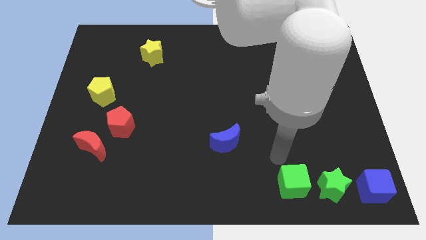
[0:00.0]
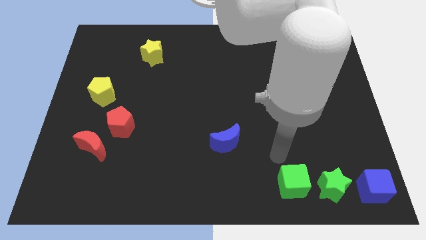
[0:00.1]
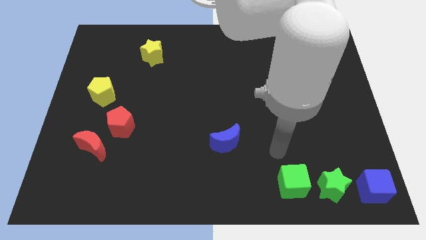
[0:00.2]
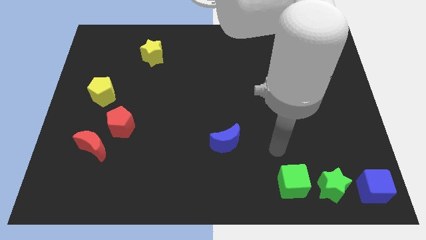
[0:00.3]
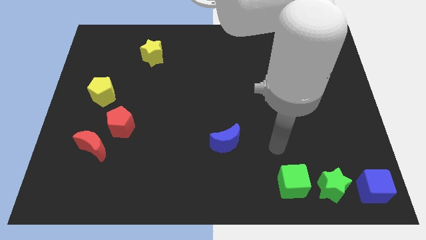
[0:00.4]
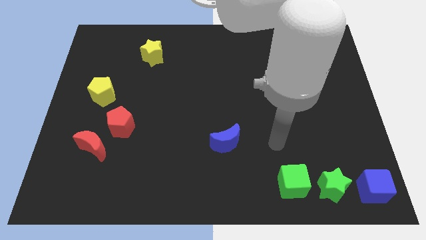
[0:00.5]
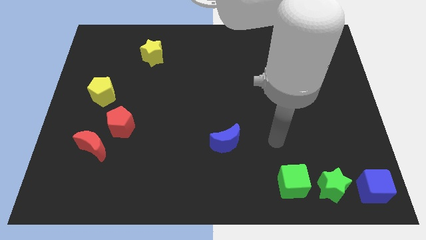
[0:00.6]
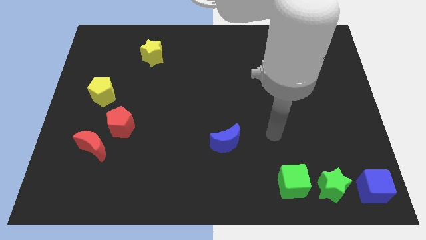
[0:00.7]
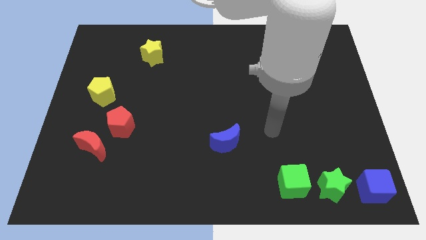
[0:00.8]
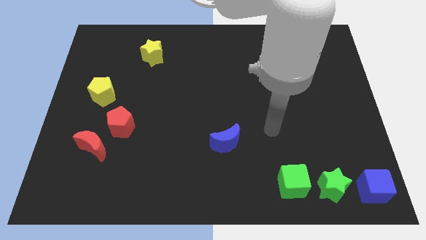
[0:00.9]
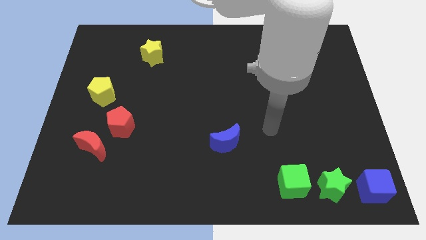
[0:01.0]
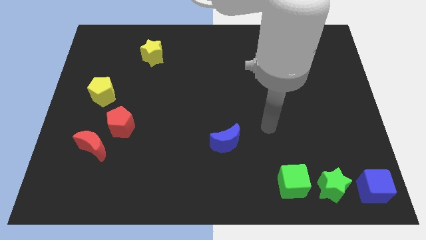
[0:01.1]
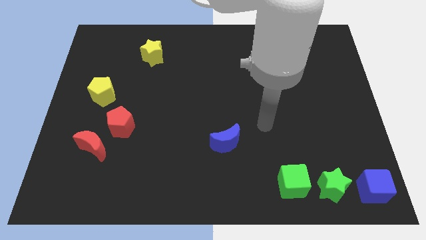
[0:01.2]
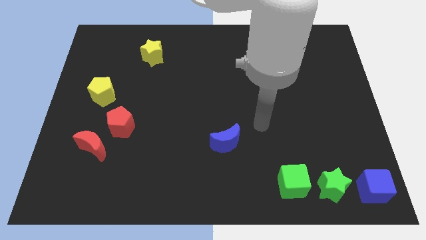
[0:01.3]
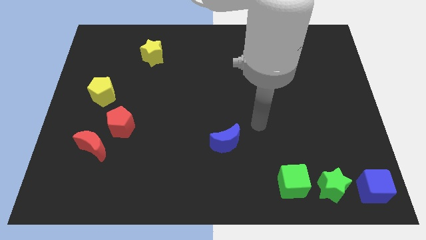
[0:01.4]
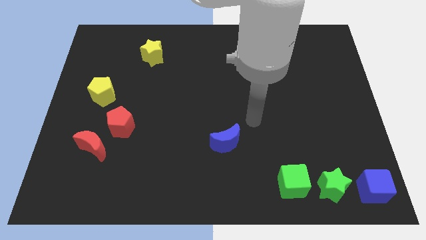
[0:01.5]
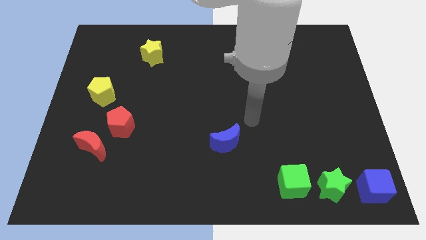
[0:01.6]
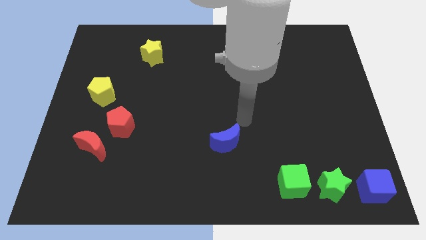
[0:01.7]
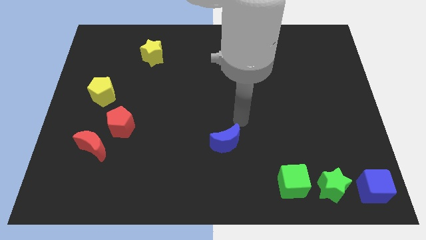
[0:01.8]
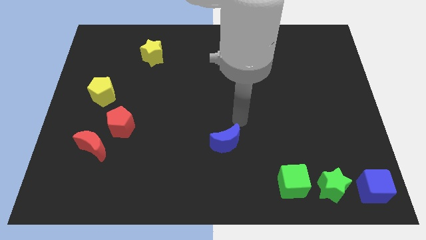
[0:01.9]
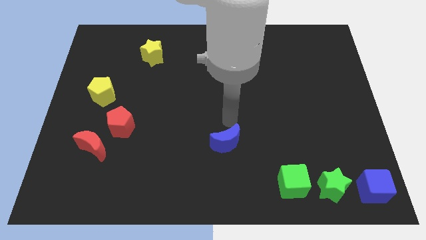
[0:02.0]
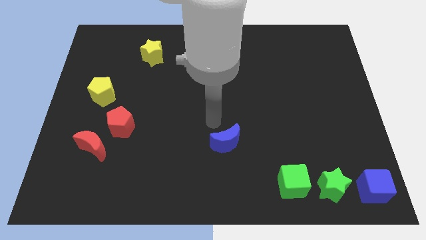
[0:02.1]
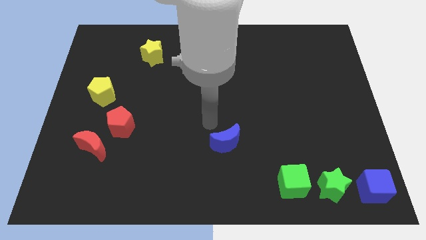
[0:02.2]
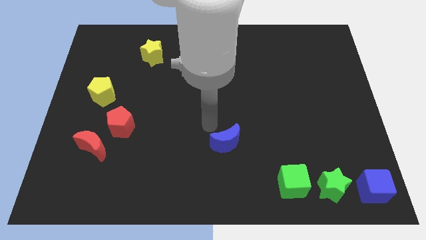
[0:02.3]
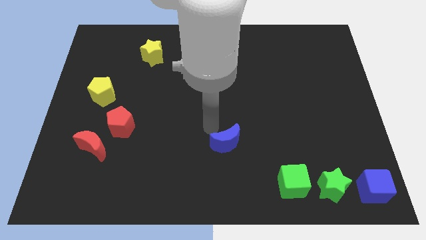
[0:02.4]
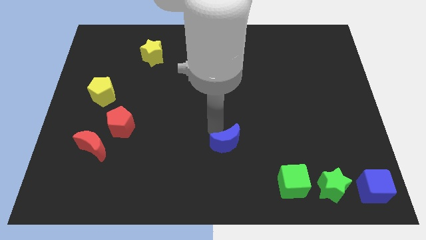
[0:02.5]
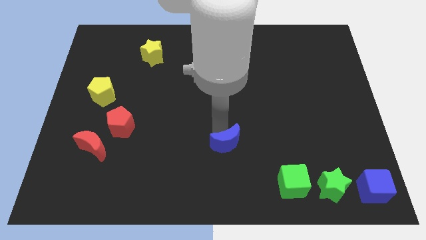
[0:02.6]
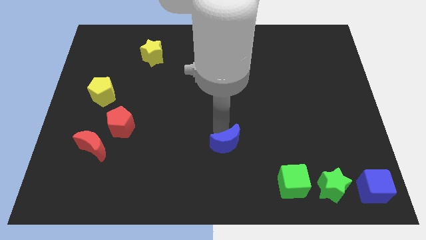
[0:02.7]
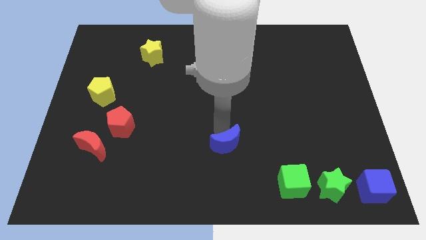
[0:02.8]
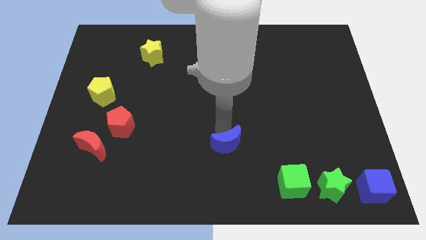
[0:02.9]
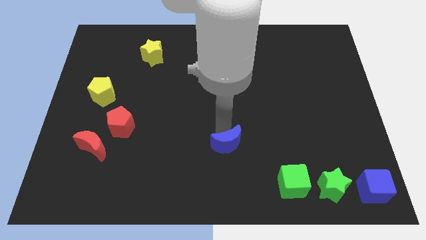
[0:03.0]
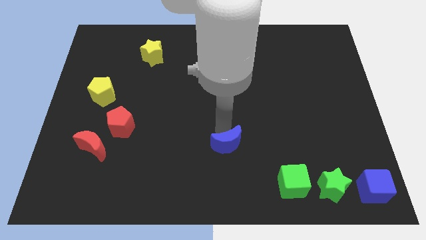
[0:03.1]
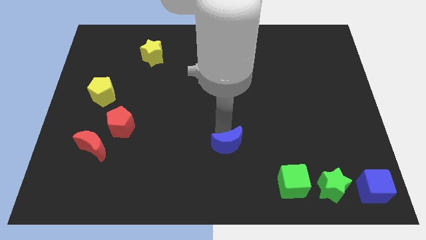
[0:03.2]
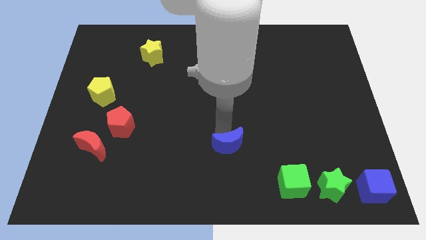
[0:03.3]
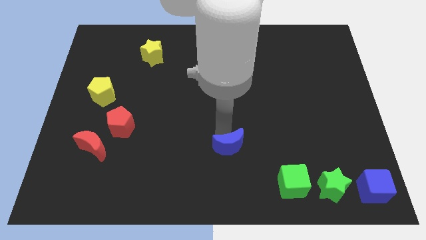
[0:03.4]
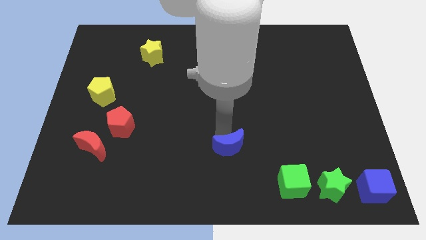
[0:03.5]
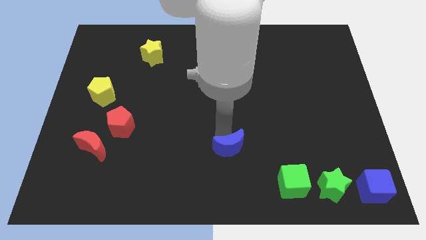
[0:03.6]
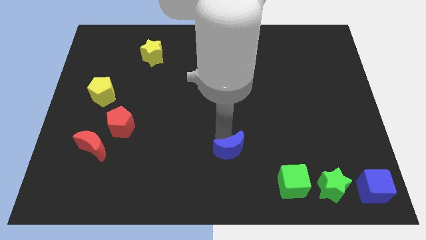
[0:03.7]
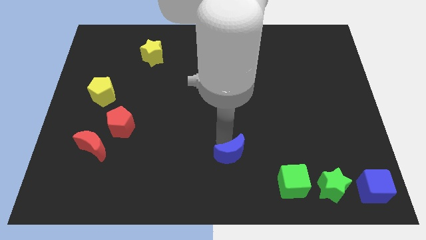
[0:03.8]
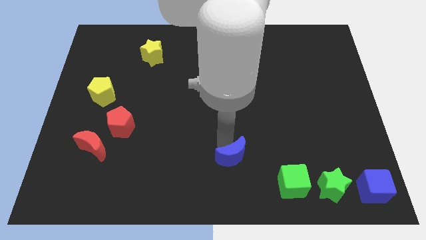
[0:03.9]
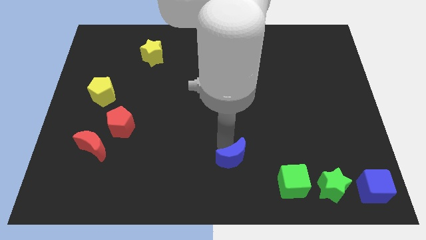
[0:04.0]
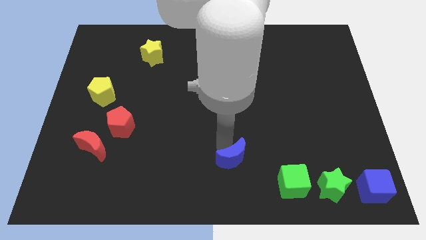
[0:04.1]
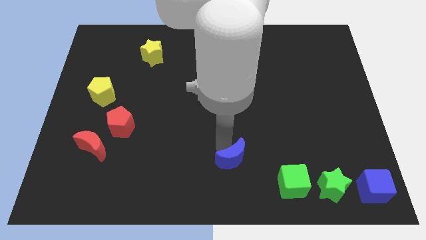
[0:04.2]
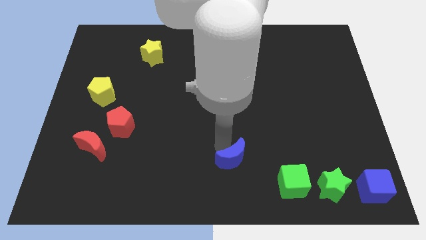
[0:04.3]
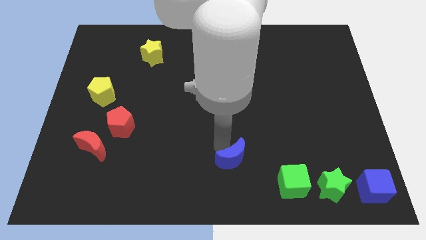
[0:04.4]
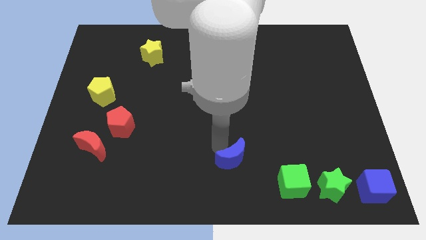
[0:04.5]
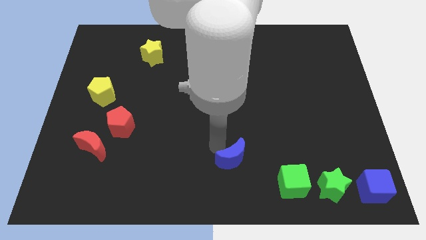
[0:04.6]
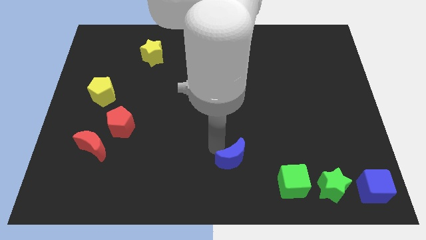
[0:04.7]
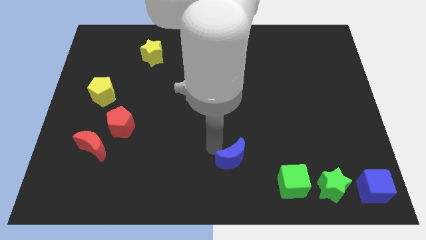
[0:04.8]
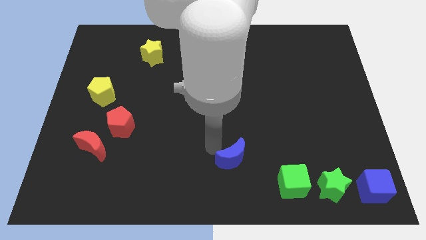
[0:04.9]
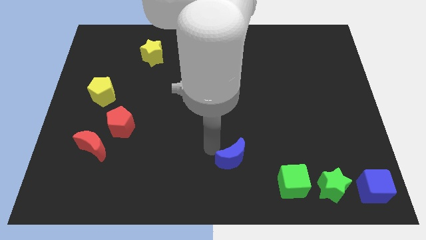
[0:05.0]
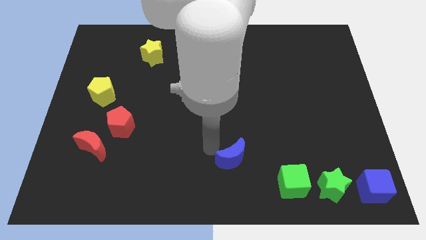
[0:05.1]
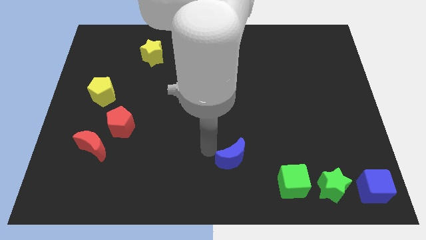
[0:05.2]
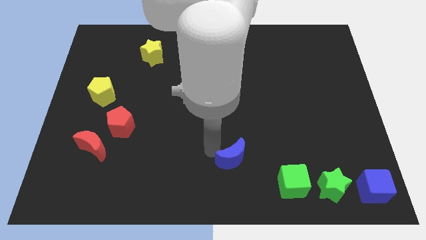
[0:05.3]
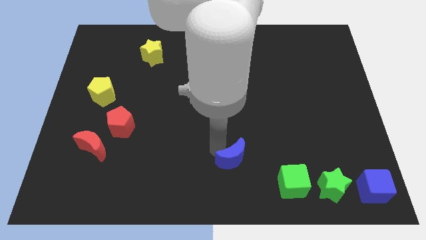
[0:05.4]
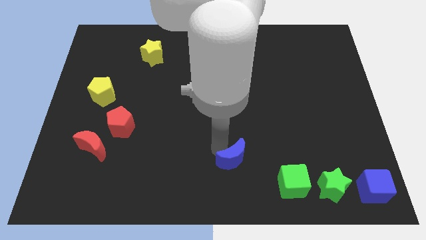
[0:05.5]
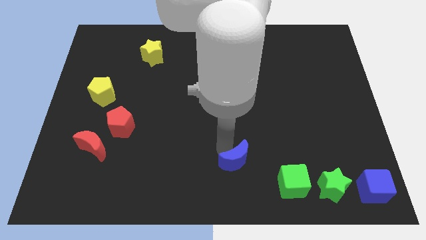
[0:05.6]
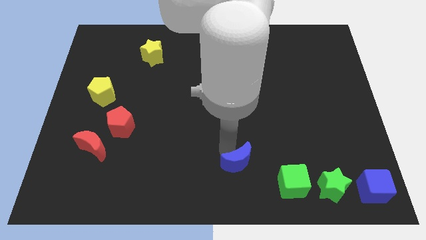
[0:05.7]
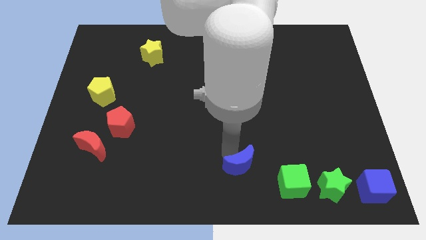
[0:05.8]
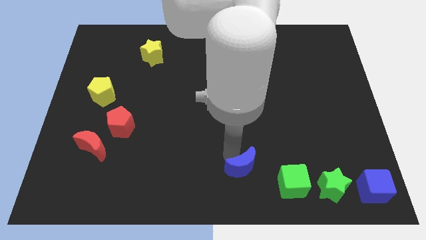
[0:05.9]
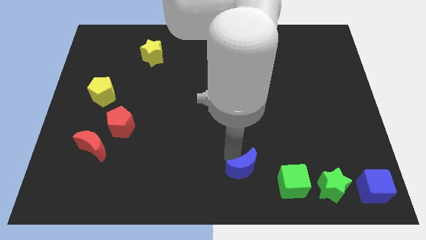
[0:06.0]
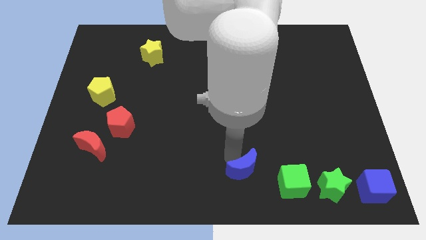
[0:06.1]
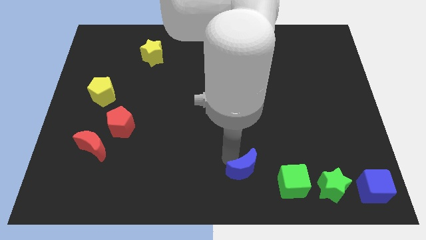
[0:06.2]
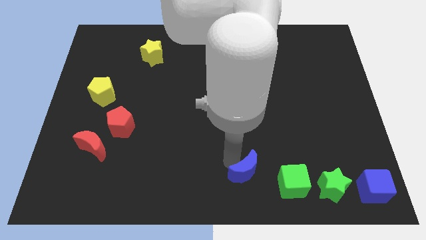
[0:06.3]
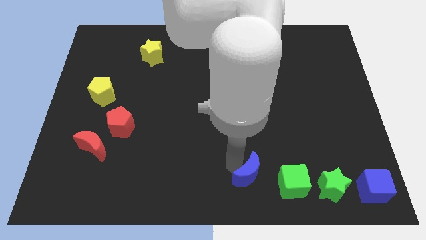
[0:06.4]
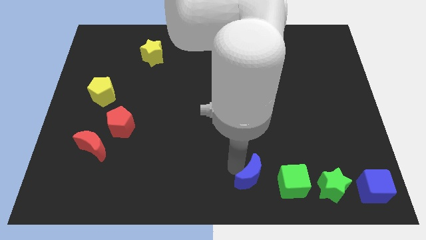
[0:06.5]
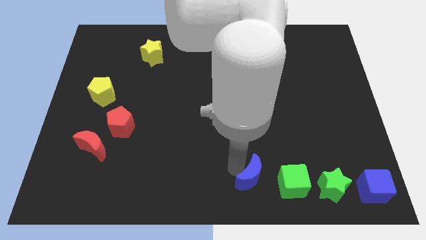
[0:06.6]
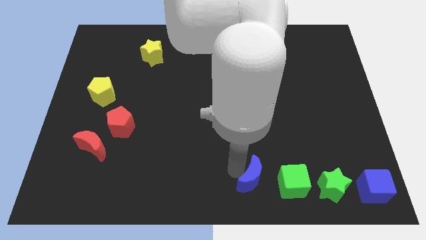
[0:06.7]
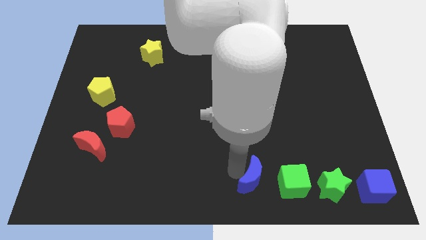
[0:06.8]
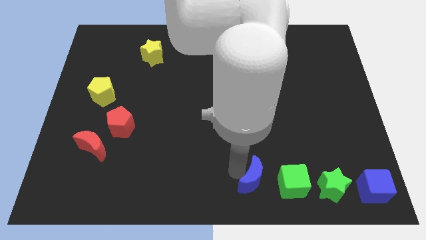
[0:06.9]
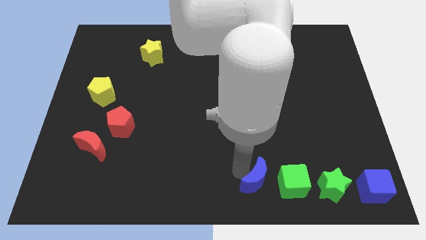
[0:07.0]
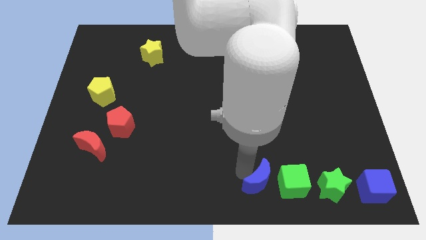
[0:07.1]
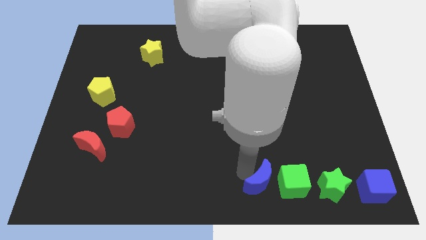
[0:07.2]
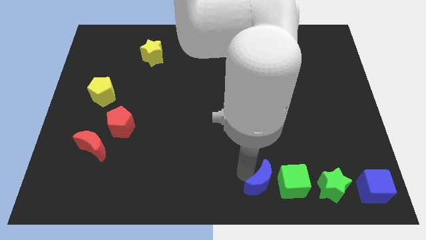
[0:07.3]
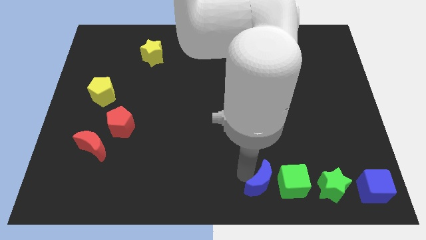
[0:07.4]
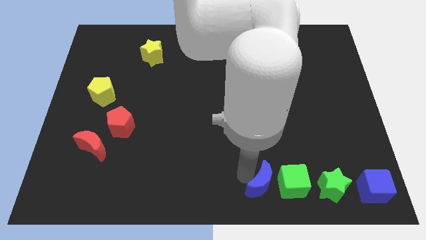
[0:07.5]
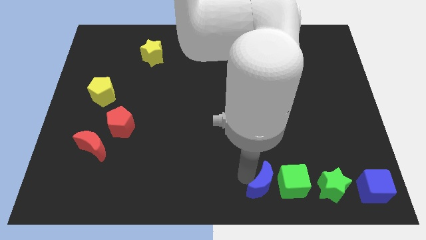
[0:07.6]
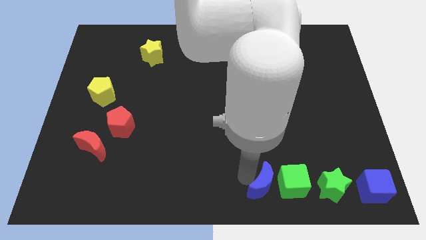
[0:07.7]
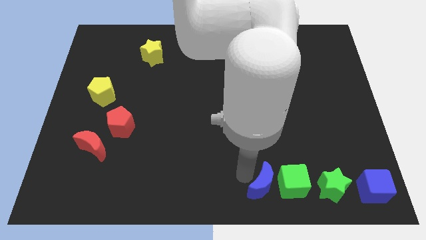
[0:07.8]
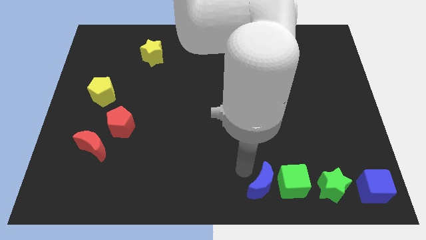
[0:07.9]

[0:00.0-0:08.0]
move blue crescent to the left of green cube

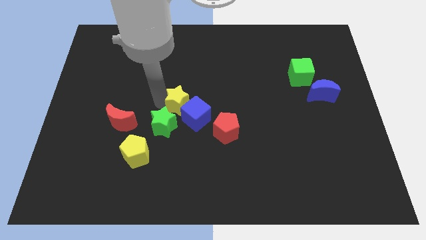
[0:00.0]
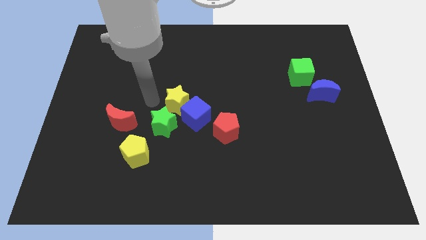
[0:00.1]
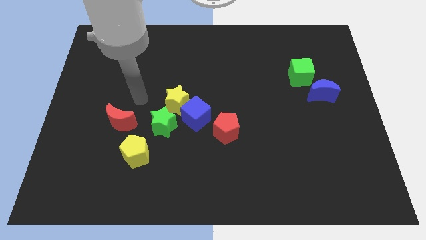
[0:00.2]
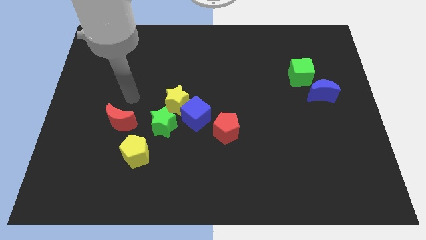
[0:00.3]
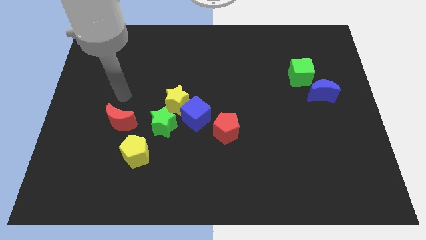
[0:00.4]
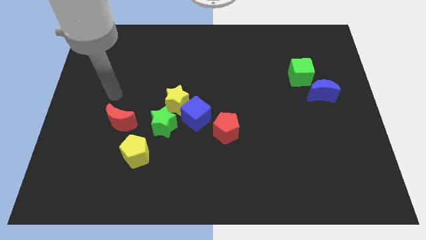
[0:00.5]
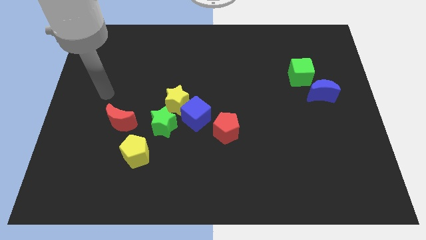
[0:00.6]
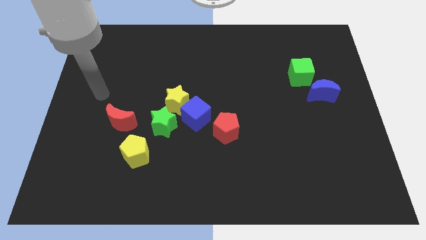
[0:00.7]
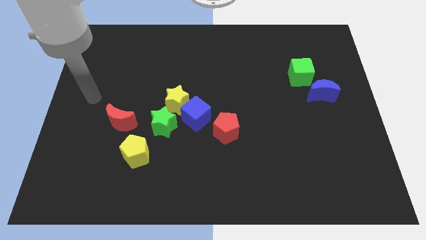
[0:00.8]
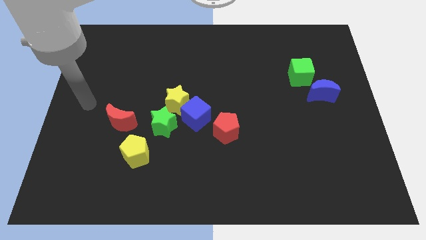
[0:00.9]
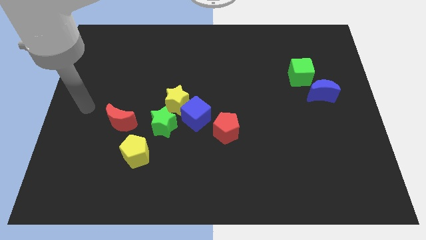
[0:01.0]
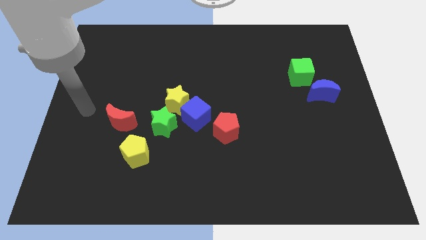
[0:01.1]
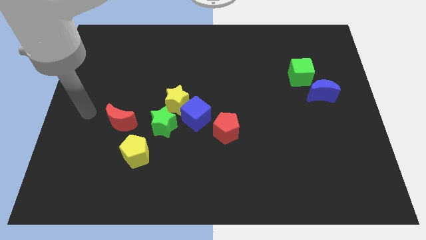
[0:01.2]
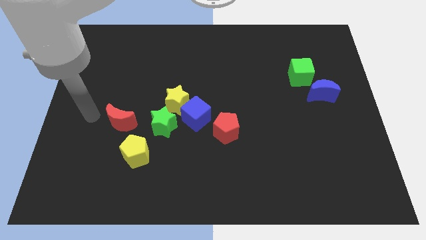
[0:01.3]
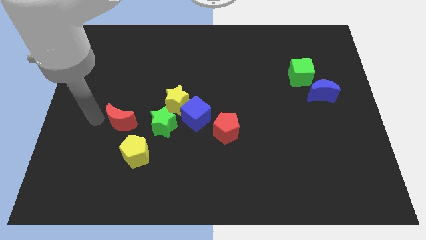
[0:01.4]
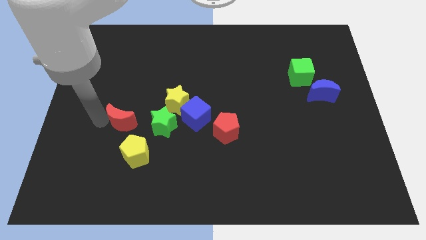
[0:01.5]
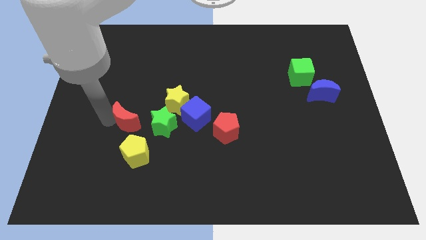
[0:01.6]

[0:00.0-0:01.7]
move your arm away from the yellow star
